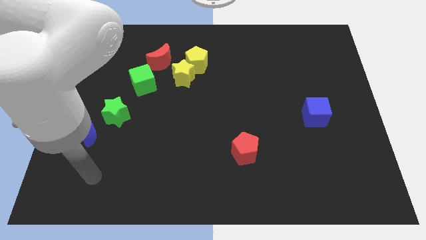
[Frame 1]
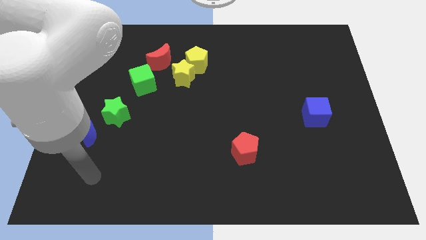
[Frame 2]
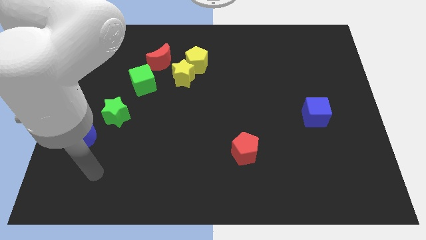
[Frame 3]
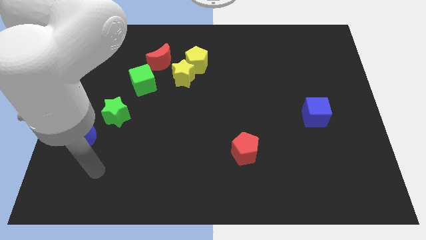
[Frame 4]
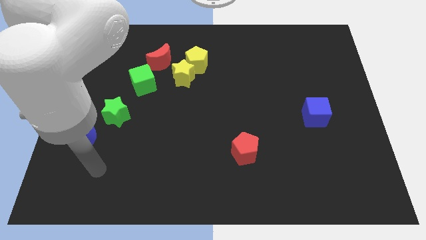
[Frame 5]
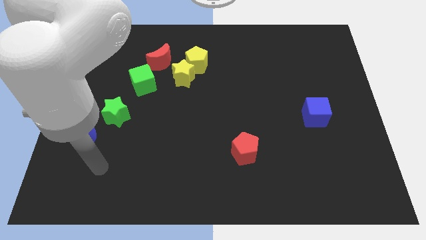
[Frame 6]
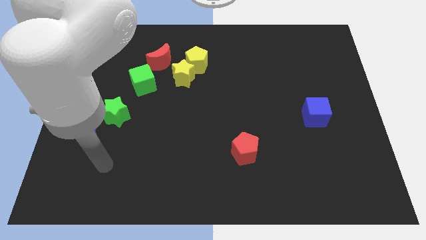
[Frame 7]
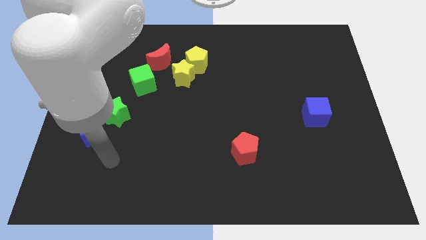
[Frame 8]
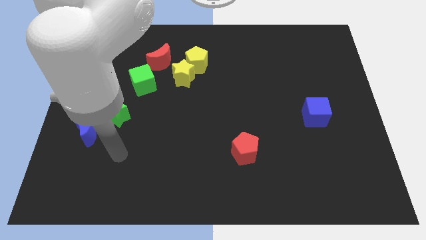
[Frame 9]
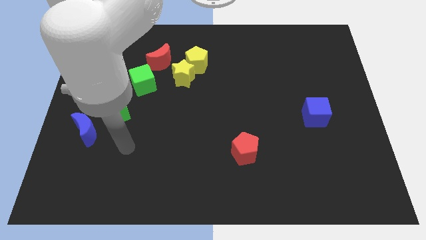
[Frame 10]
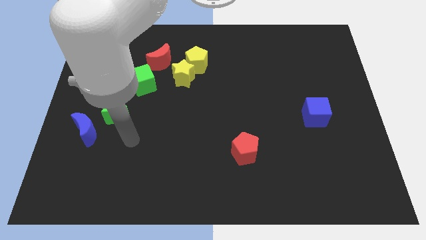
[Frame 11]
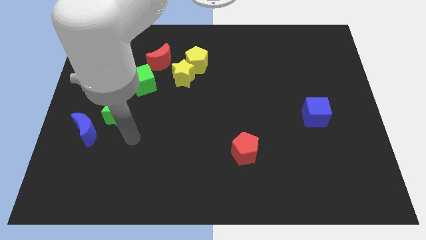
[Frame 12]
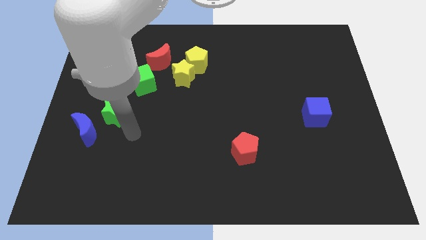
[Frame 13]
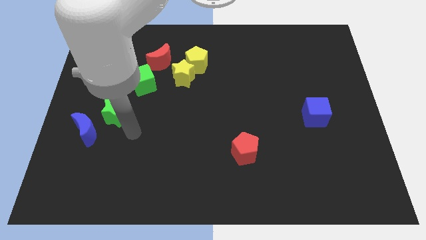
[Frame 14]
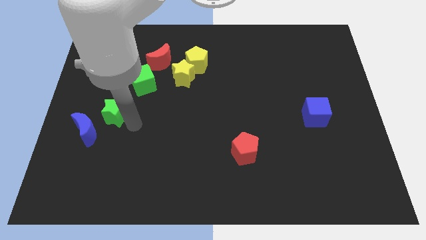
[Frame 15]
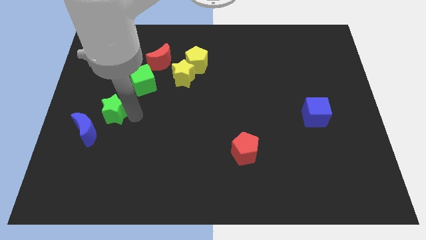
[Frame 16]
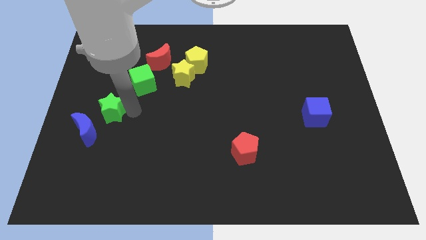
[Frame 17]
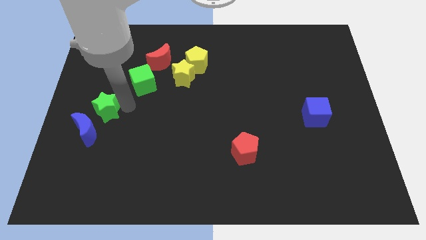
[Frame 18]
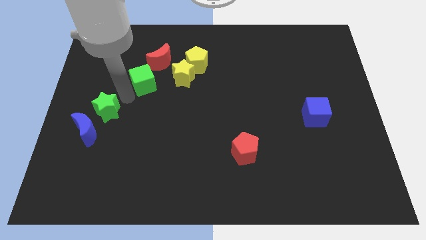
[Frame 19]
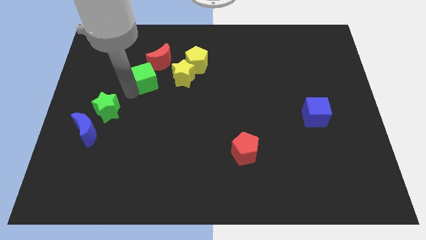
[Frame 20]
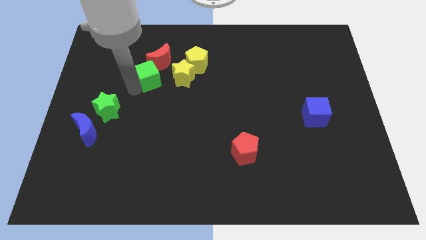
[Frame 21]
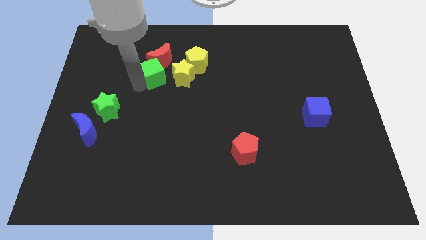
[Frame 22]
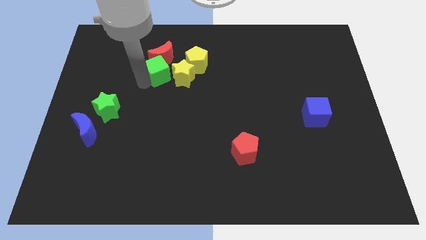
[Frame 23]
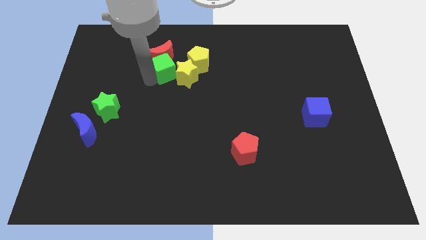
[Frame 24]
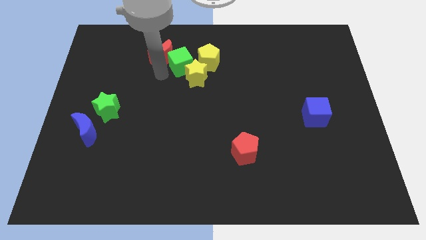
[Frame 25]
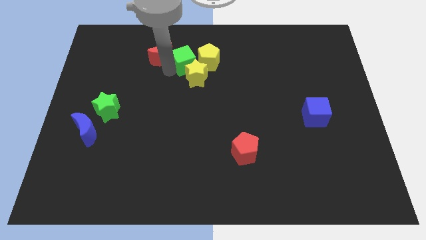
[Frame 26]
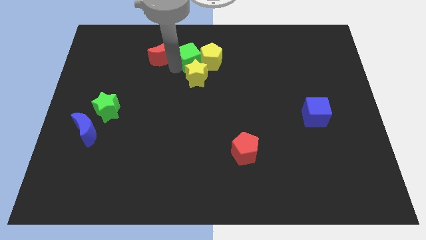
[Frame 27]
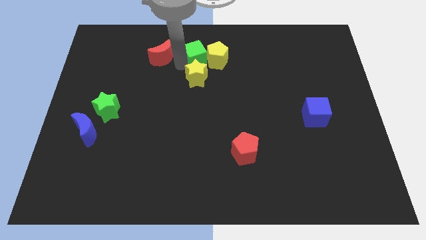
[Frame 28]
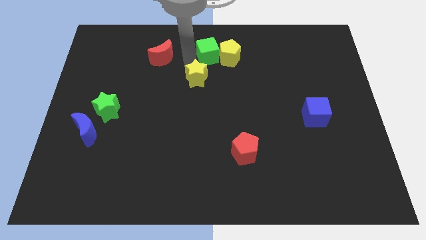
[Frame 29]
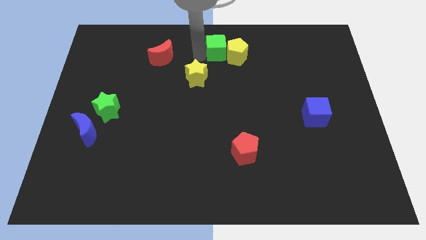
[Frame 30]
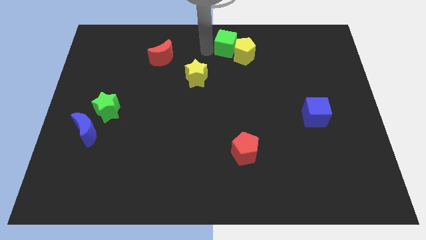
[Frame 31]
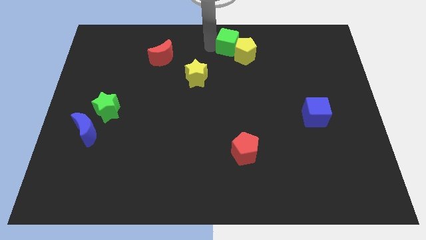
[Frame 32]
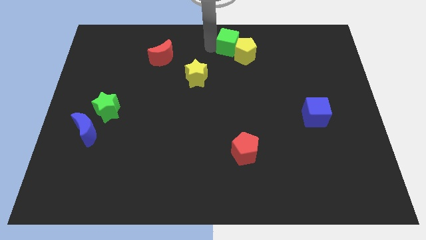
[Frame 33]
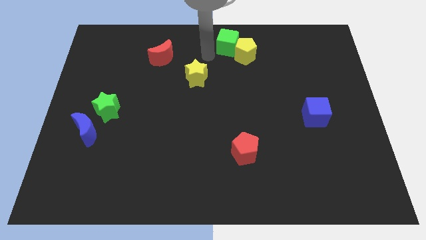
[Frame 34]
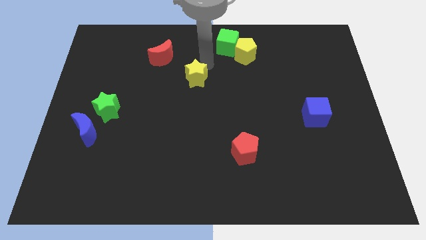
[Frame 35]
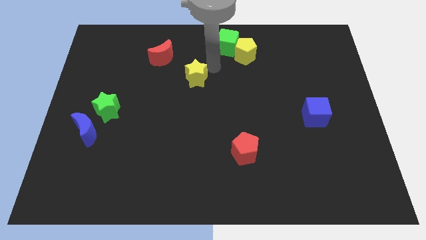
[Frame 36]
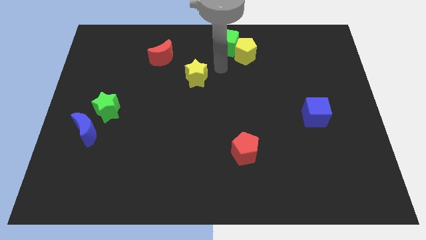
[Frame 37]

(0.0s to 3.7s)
move the green cube to the top center of the board

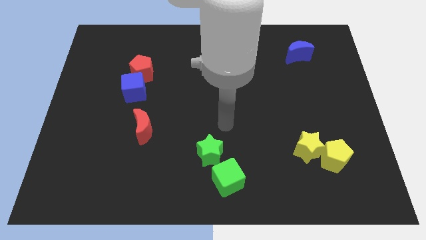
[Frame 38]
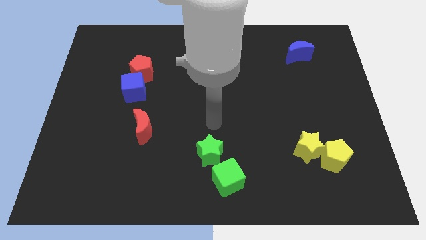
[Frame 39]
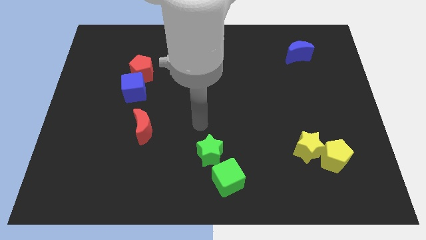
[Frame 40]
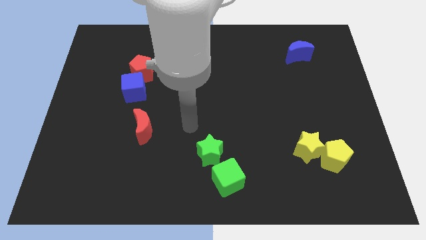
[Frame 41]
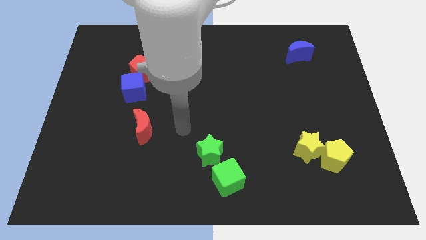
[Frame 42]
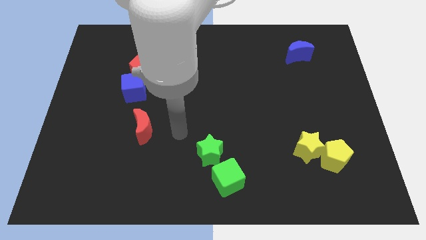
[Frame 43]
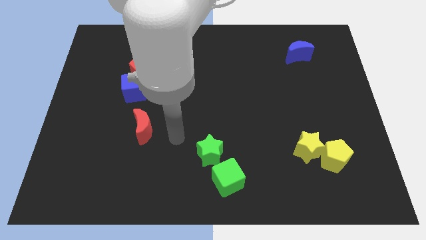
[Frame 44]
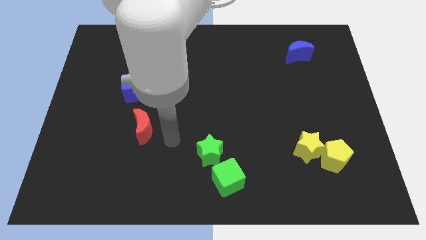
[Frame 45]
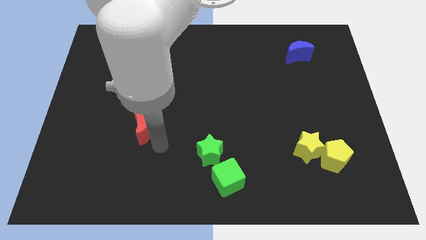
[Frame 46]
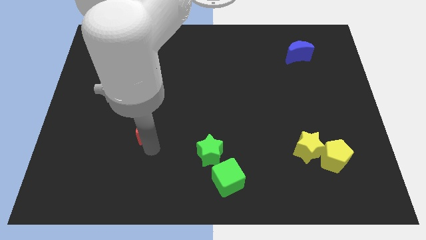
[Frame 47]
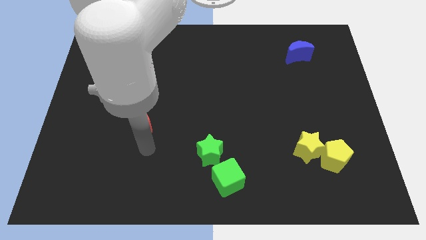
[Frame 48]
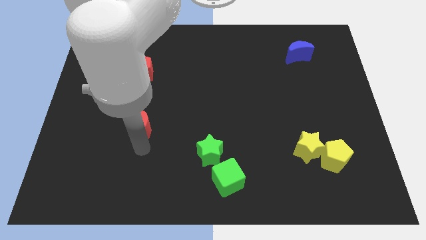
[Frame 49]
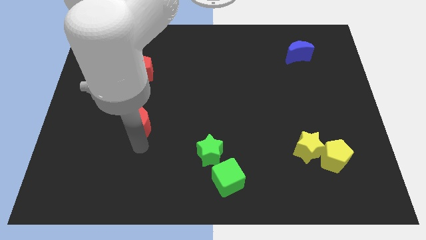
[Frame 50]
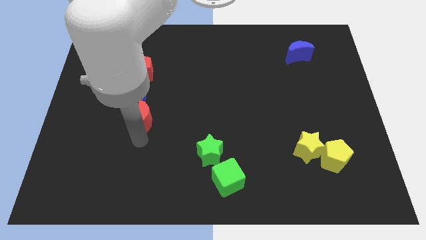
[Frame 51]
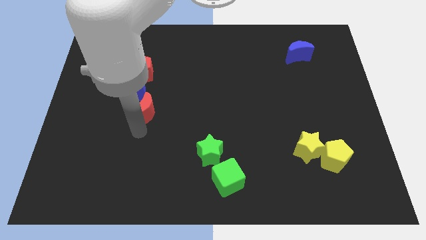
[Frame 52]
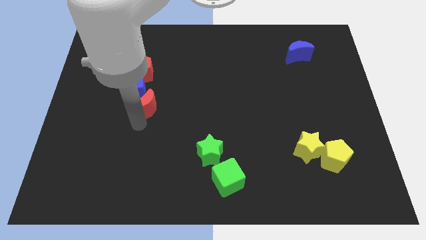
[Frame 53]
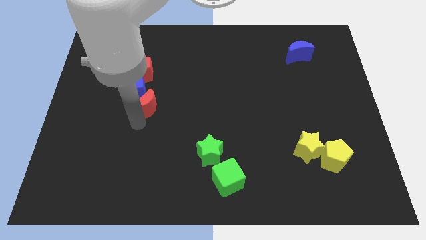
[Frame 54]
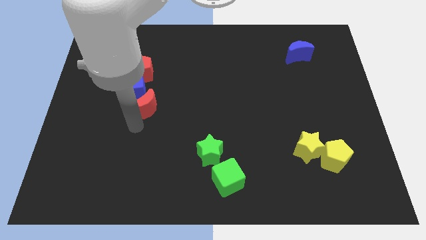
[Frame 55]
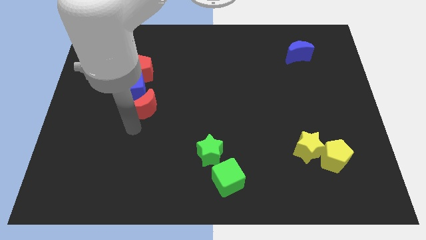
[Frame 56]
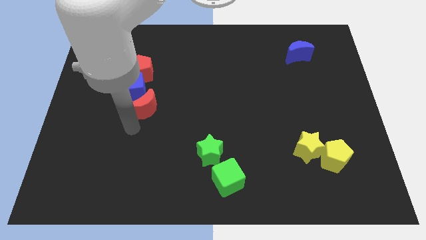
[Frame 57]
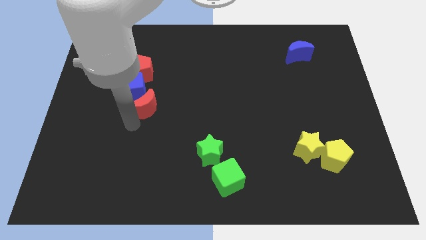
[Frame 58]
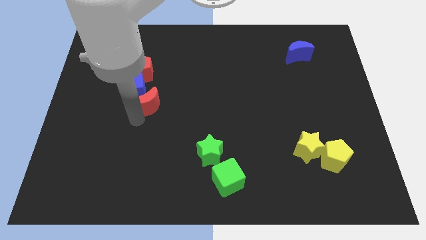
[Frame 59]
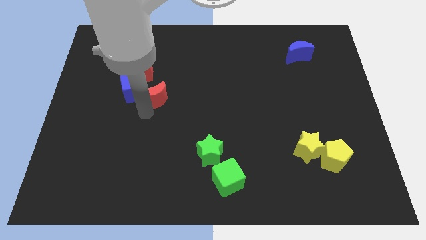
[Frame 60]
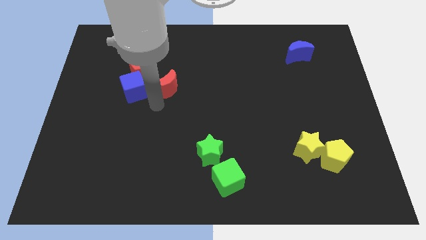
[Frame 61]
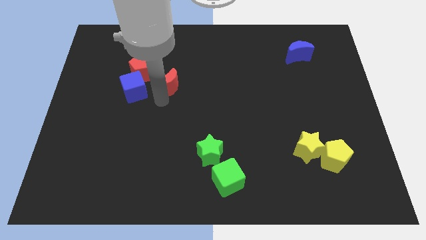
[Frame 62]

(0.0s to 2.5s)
move the red crescent right to the blue cube

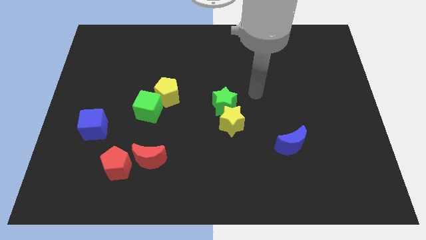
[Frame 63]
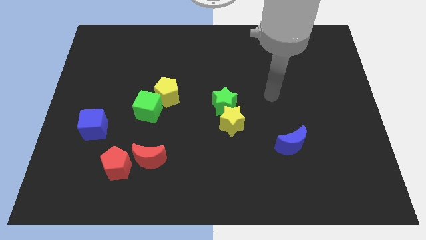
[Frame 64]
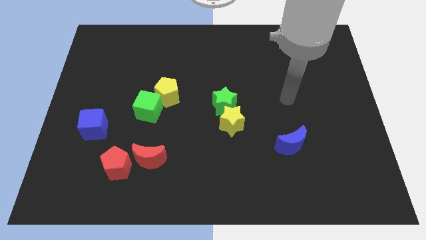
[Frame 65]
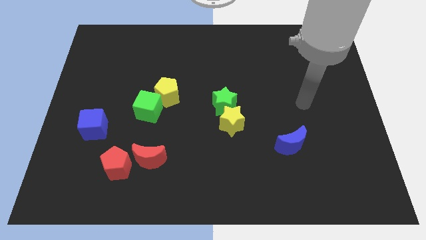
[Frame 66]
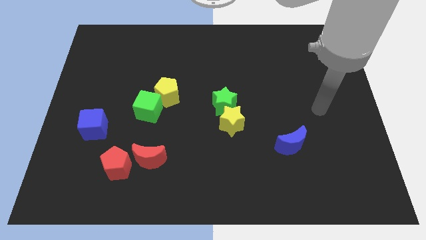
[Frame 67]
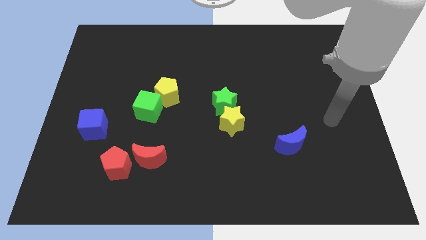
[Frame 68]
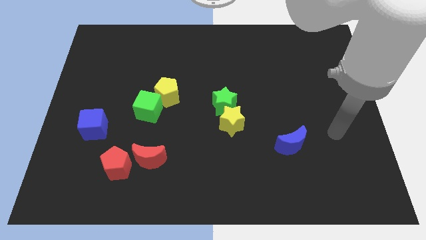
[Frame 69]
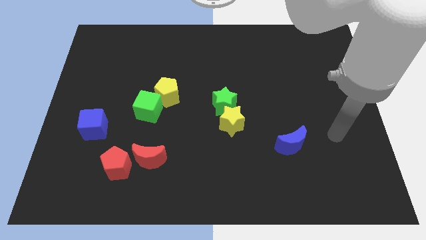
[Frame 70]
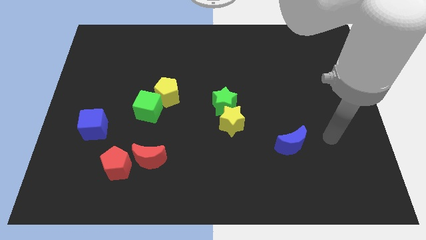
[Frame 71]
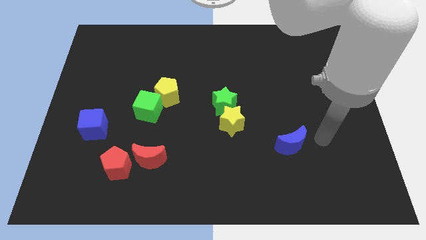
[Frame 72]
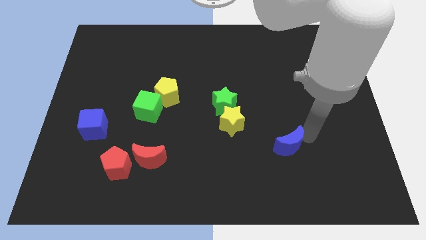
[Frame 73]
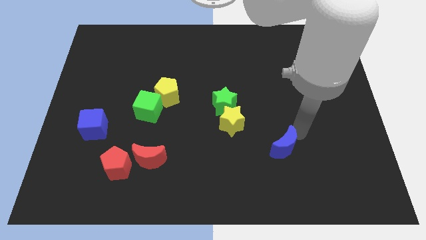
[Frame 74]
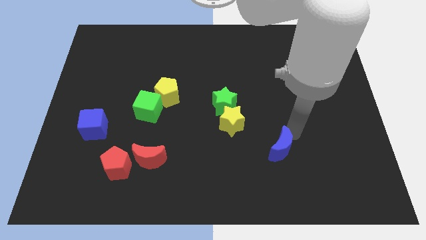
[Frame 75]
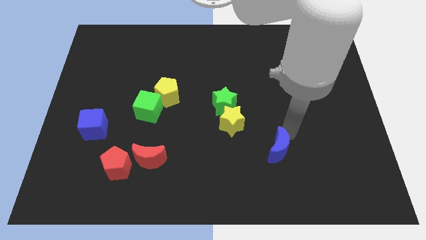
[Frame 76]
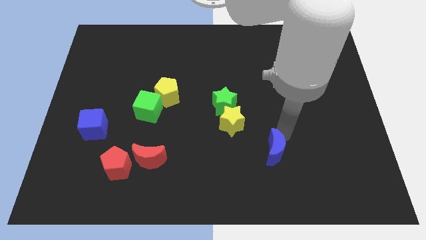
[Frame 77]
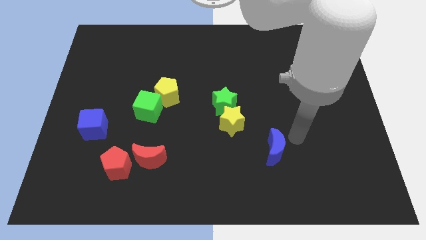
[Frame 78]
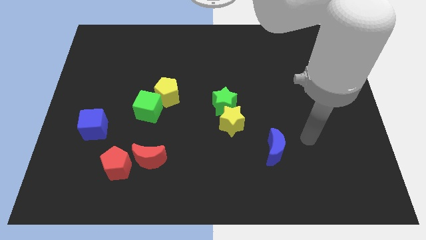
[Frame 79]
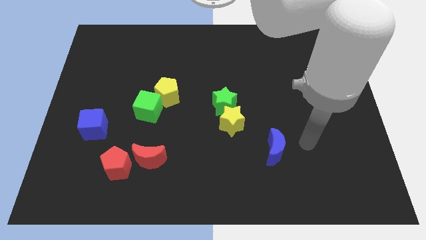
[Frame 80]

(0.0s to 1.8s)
move the blue crescent slightly to the left

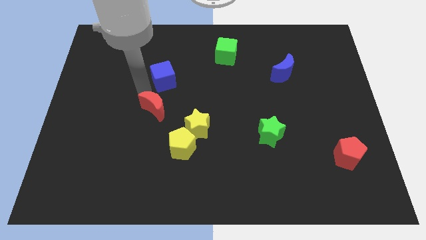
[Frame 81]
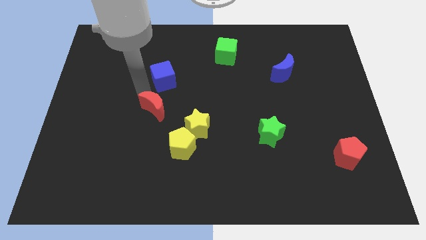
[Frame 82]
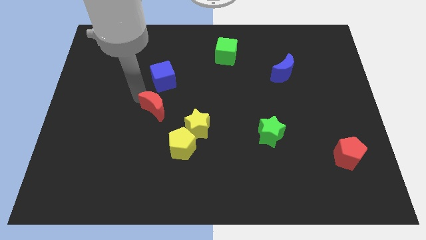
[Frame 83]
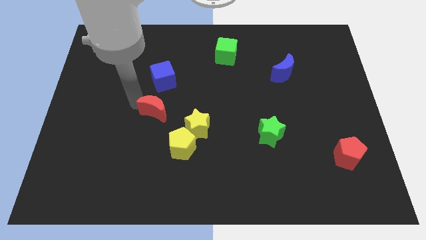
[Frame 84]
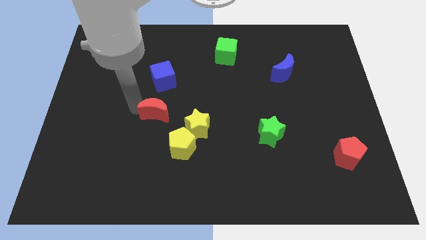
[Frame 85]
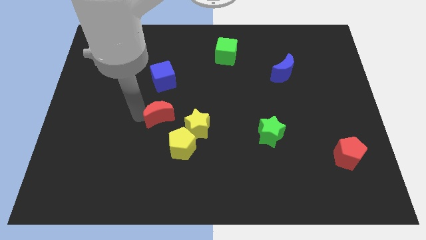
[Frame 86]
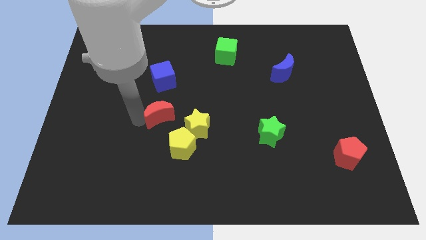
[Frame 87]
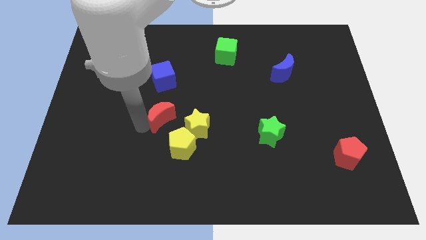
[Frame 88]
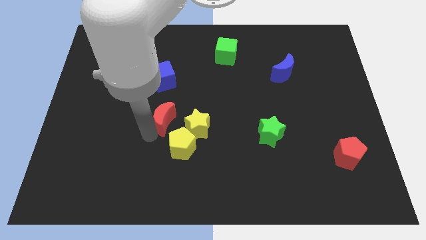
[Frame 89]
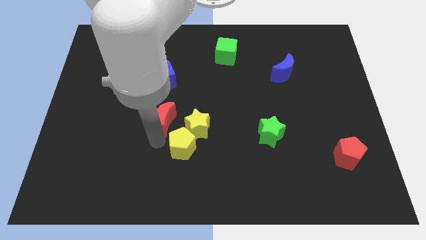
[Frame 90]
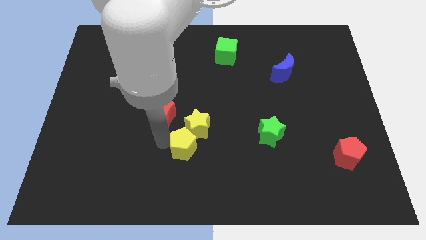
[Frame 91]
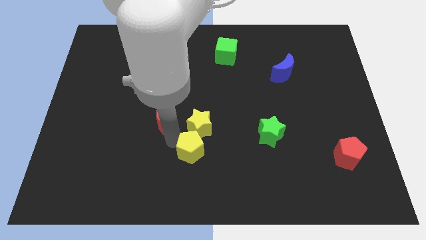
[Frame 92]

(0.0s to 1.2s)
adjust the red crescent close to two yellow blocks
